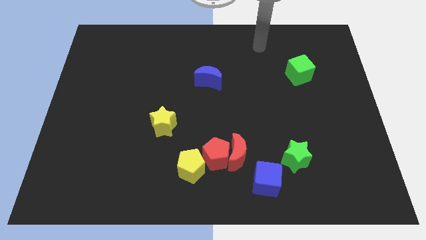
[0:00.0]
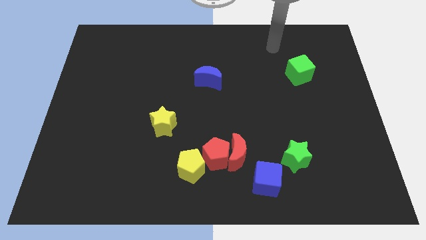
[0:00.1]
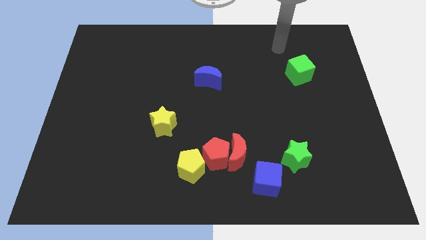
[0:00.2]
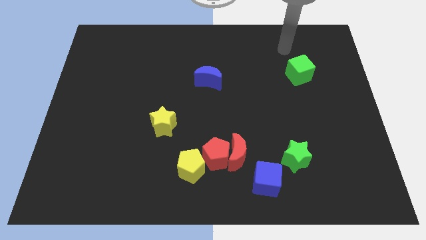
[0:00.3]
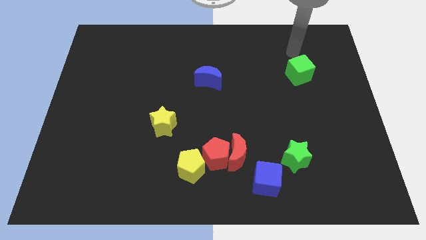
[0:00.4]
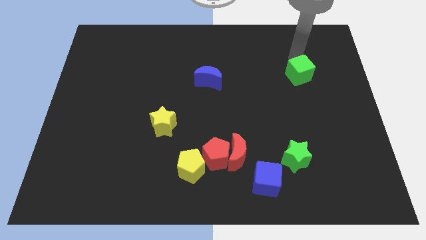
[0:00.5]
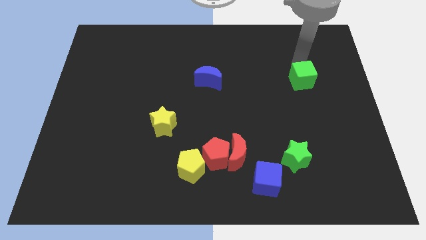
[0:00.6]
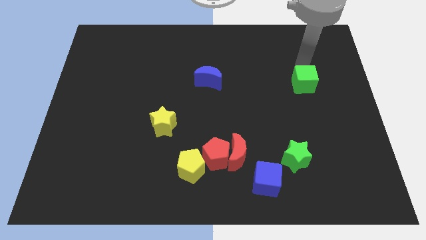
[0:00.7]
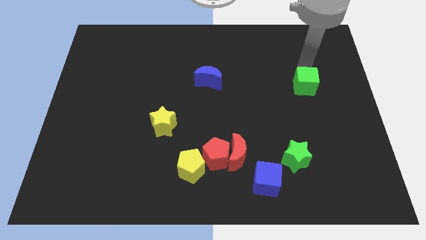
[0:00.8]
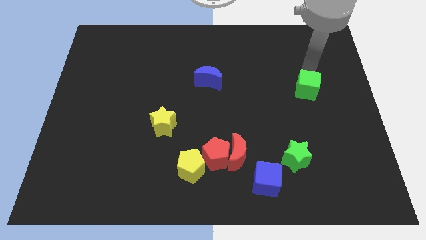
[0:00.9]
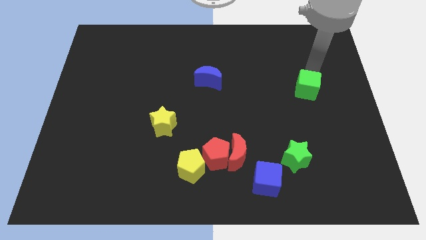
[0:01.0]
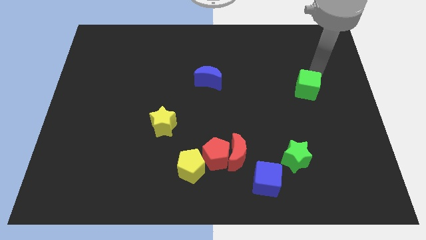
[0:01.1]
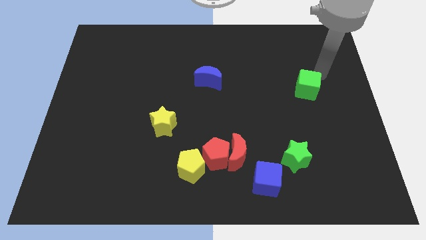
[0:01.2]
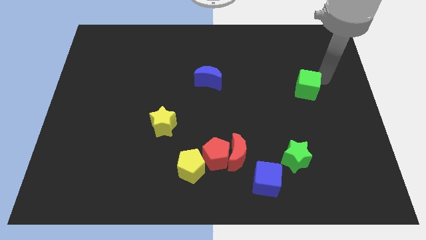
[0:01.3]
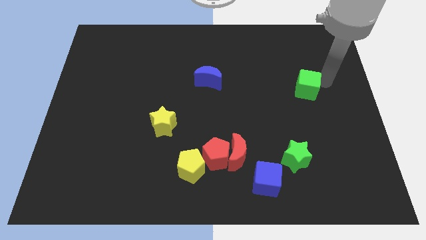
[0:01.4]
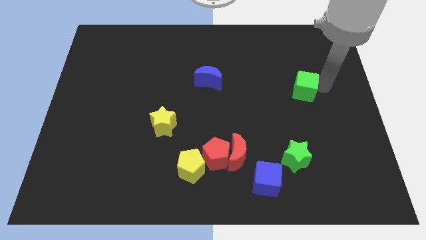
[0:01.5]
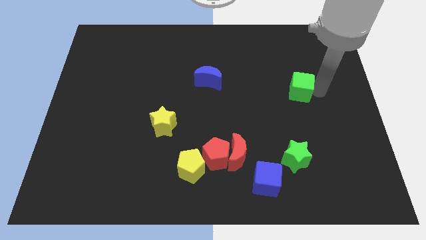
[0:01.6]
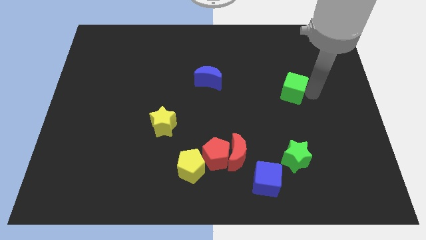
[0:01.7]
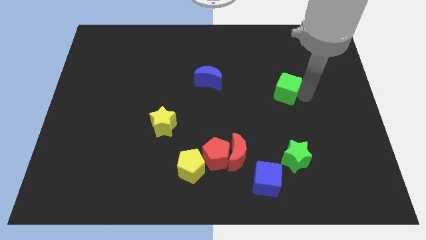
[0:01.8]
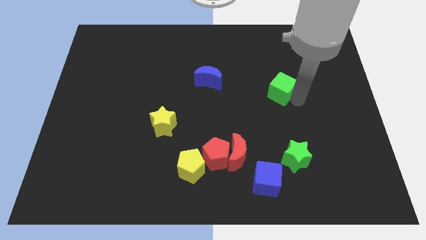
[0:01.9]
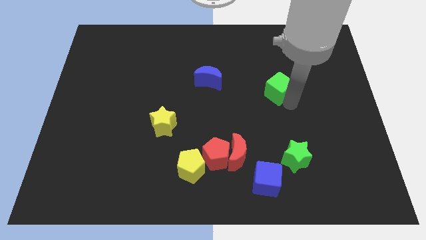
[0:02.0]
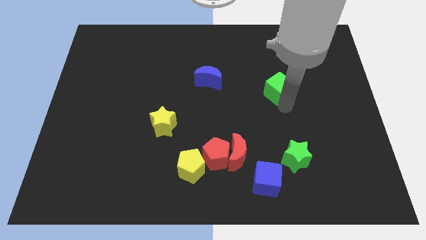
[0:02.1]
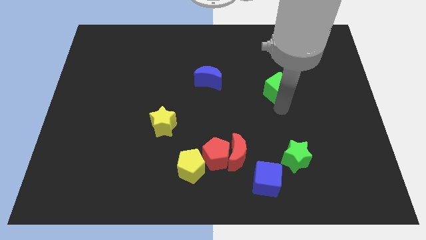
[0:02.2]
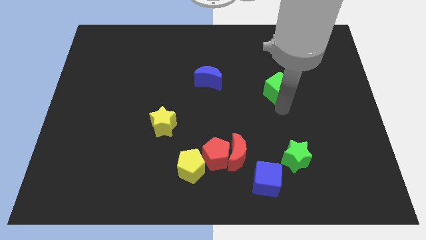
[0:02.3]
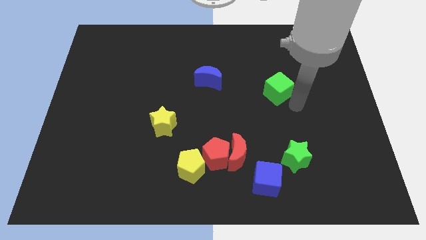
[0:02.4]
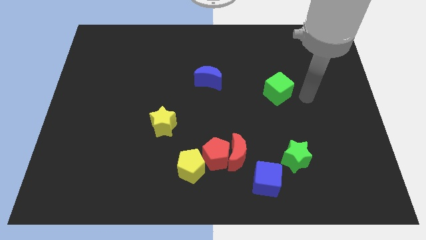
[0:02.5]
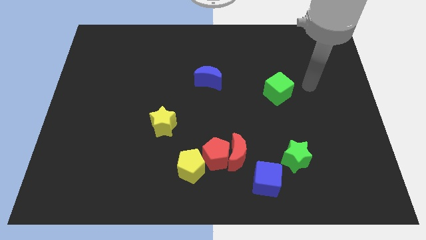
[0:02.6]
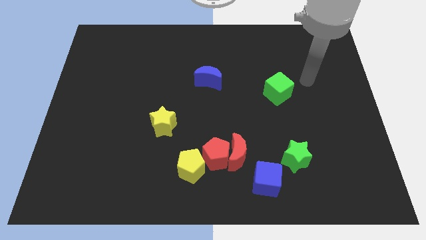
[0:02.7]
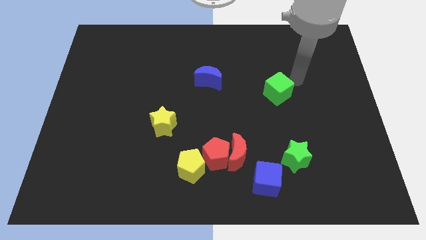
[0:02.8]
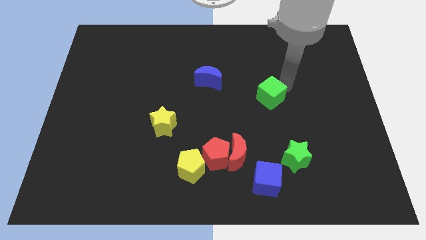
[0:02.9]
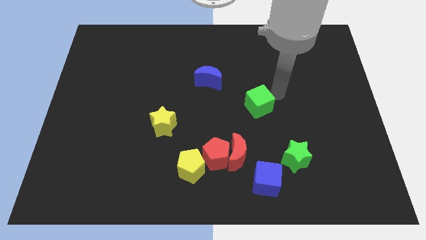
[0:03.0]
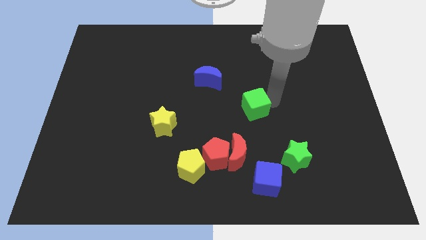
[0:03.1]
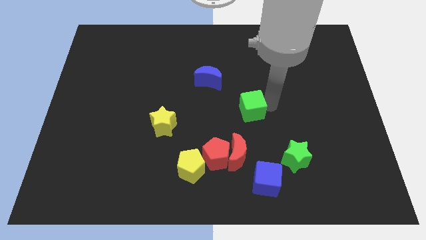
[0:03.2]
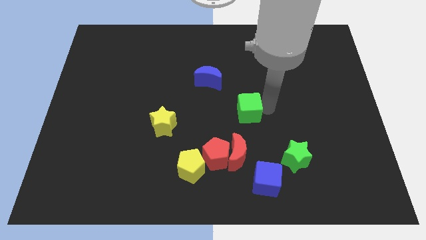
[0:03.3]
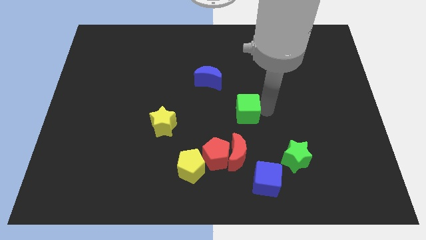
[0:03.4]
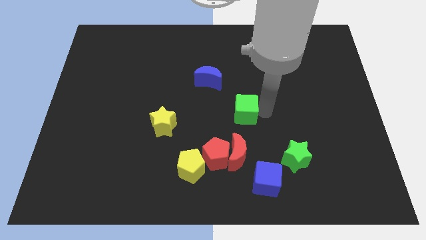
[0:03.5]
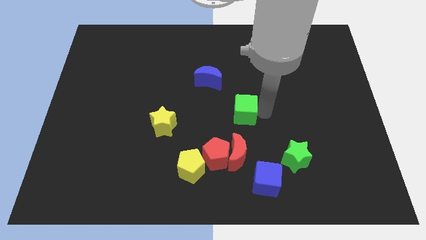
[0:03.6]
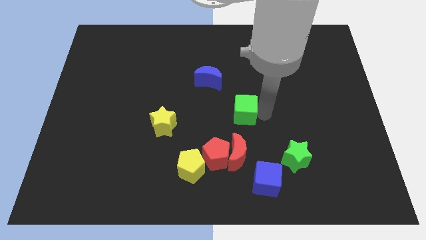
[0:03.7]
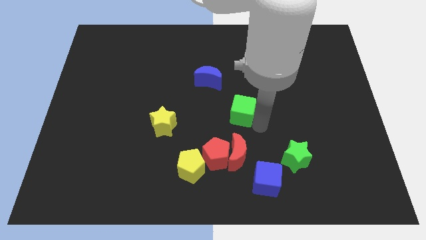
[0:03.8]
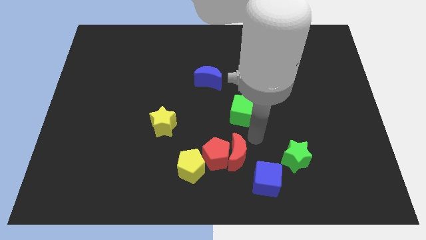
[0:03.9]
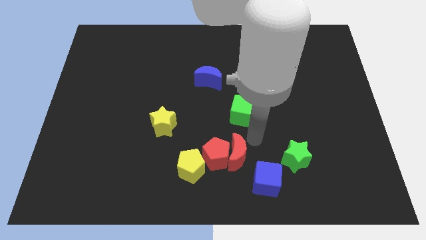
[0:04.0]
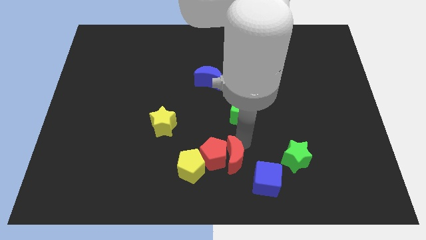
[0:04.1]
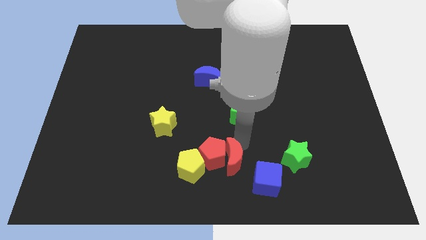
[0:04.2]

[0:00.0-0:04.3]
place green cube to the top of red moon

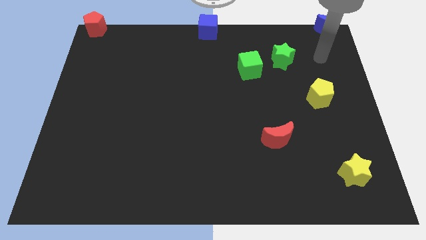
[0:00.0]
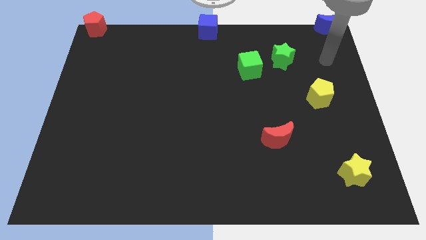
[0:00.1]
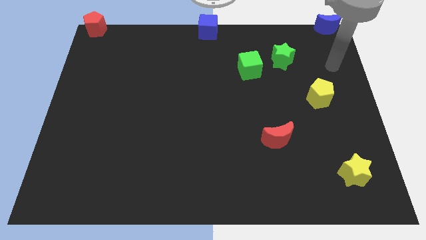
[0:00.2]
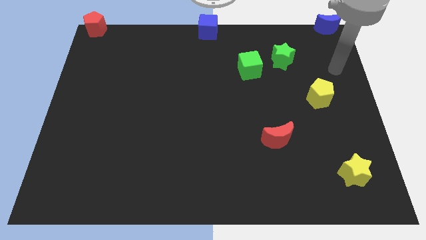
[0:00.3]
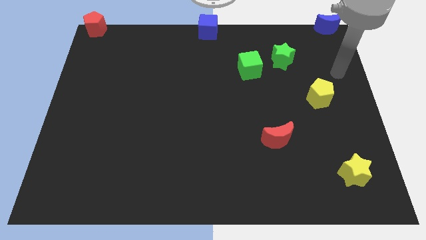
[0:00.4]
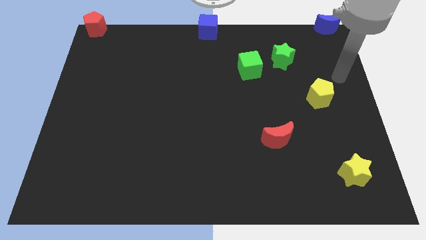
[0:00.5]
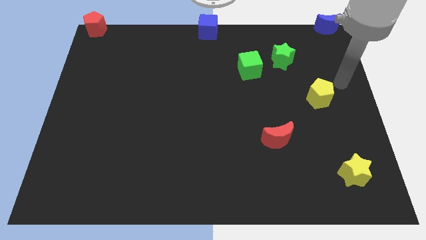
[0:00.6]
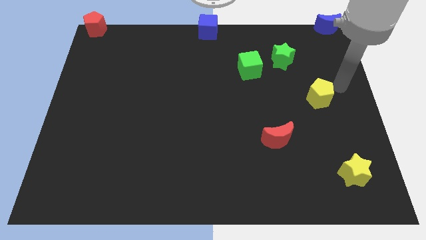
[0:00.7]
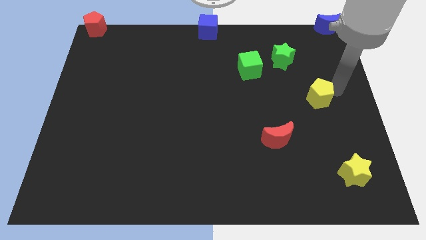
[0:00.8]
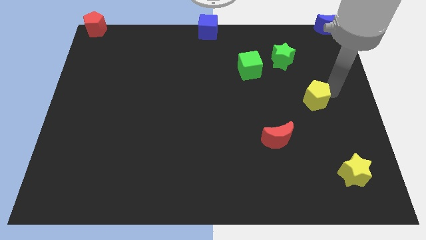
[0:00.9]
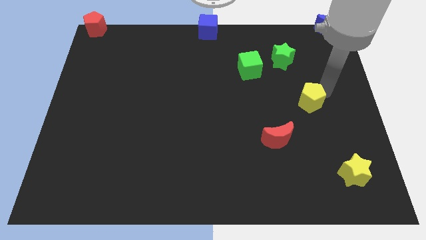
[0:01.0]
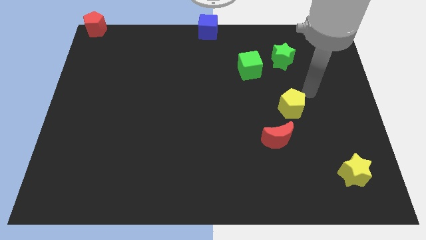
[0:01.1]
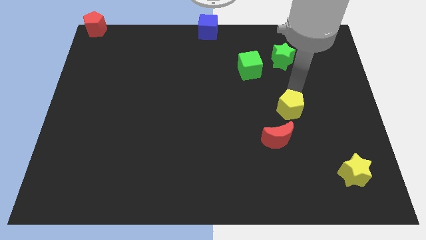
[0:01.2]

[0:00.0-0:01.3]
put the yellow pentagon on the top right of the red moon

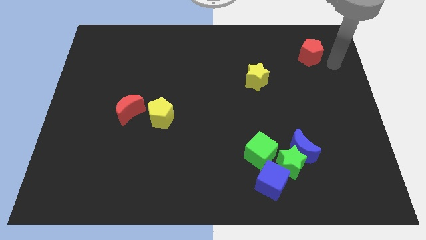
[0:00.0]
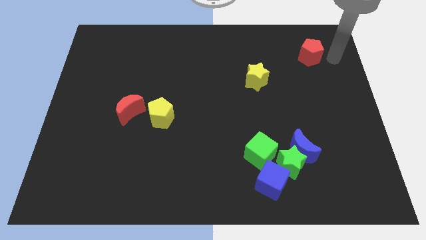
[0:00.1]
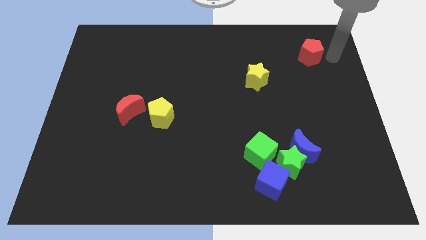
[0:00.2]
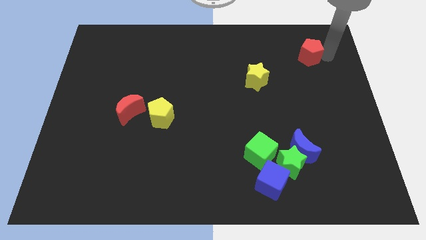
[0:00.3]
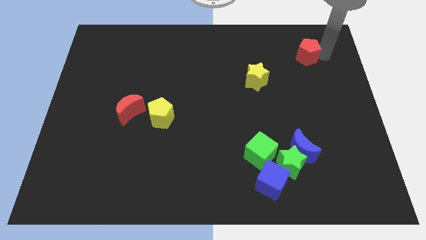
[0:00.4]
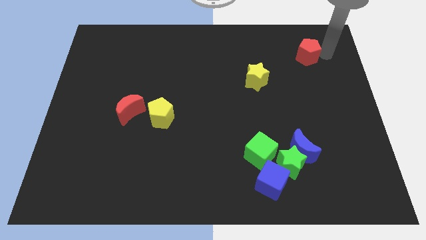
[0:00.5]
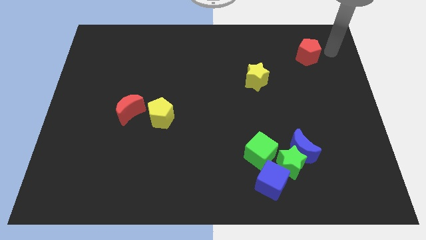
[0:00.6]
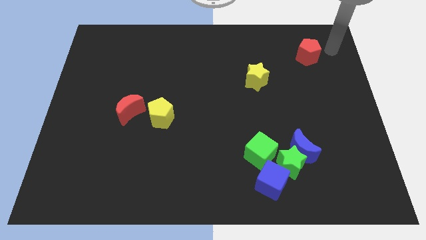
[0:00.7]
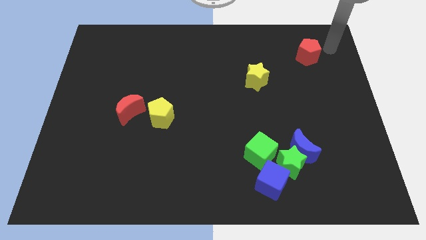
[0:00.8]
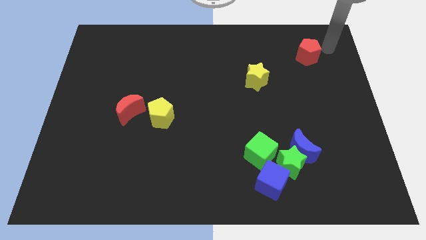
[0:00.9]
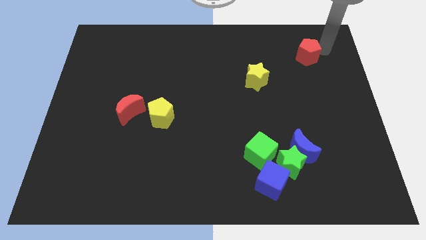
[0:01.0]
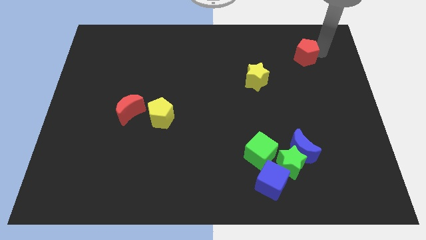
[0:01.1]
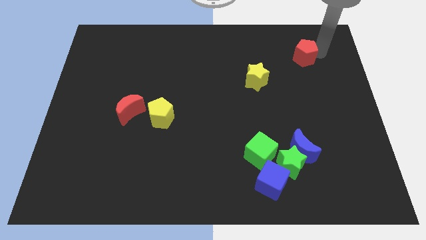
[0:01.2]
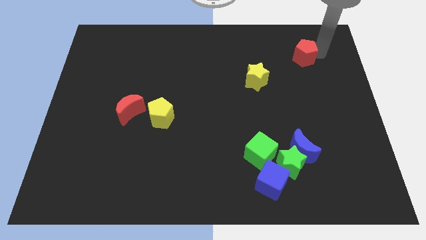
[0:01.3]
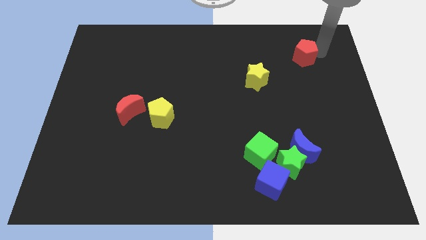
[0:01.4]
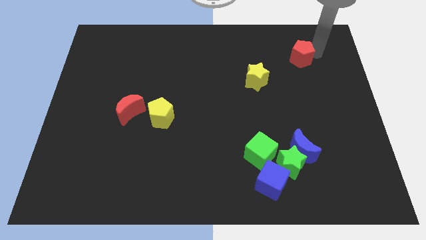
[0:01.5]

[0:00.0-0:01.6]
move the arm towards the red pentagon

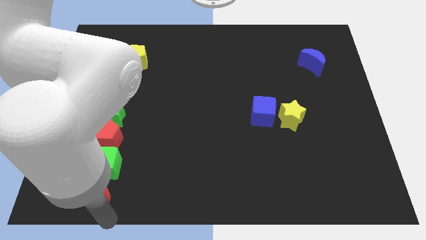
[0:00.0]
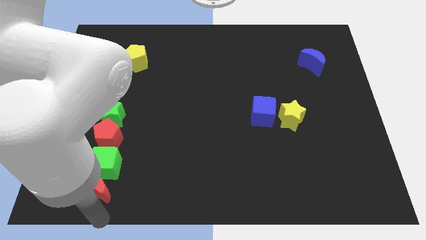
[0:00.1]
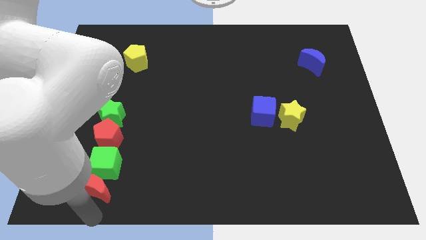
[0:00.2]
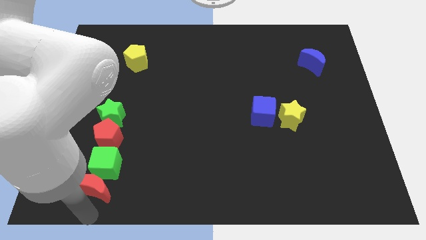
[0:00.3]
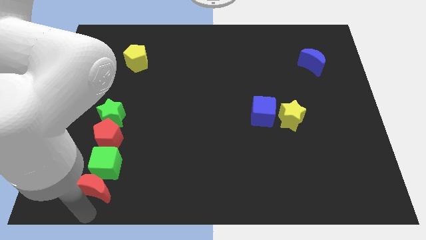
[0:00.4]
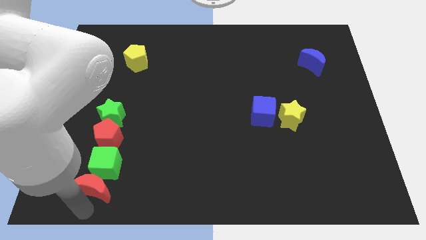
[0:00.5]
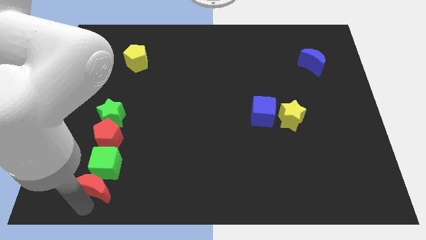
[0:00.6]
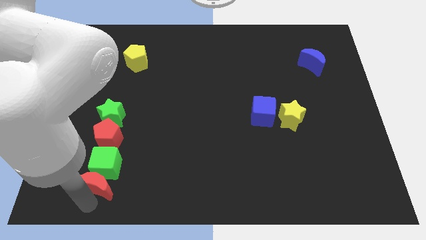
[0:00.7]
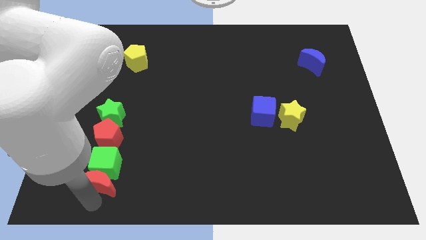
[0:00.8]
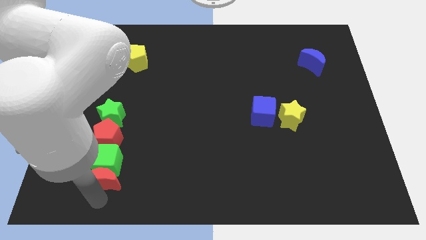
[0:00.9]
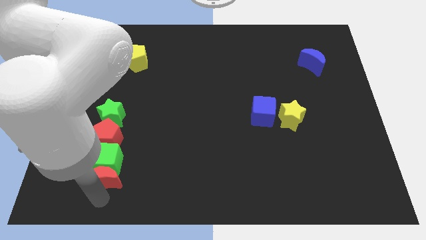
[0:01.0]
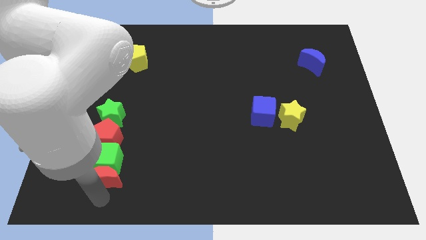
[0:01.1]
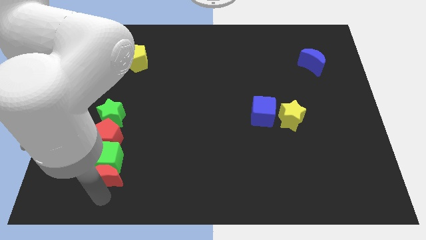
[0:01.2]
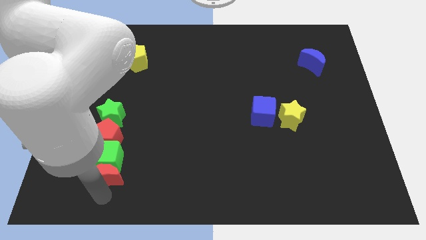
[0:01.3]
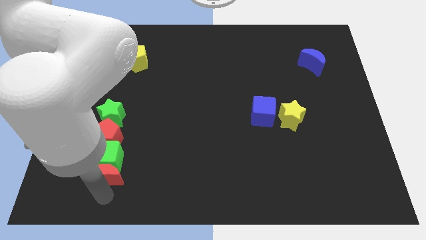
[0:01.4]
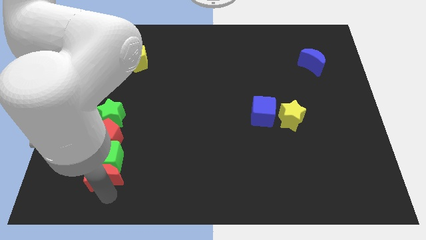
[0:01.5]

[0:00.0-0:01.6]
push the red moon into the green cube
